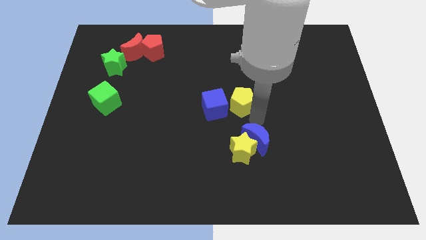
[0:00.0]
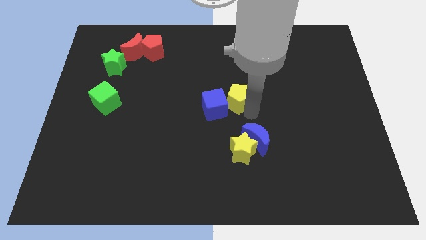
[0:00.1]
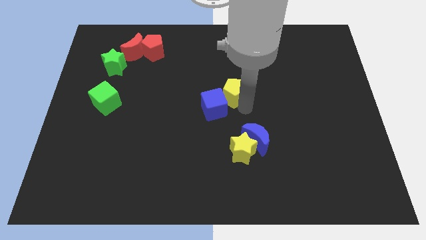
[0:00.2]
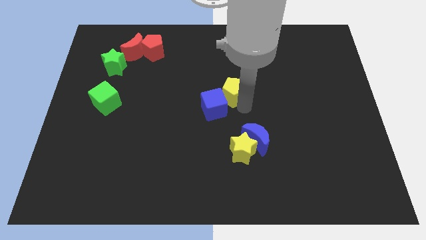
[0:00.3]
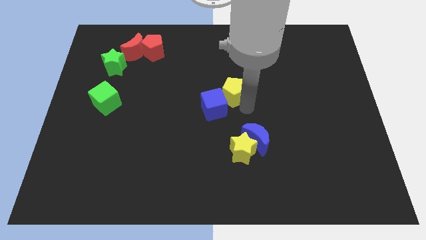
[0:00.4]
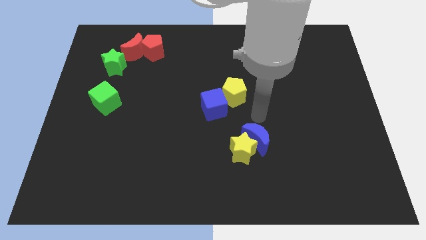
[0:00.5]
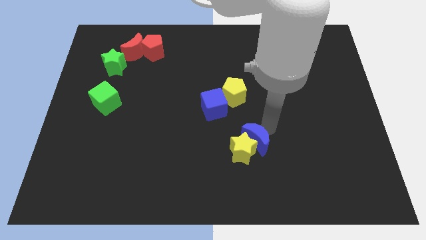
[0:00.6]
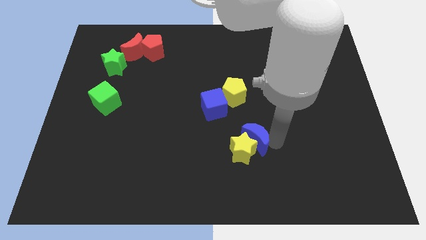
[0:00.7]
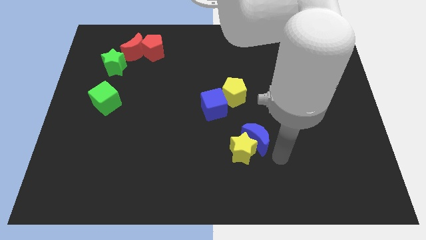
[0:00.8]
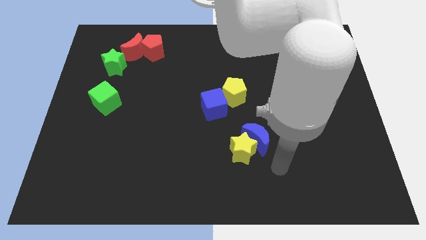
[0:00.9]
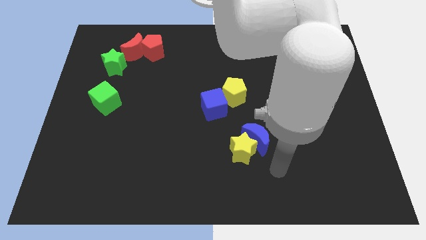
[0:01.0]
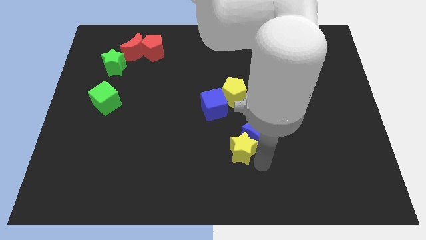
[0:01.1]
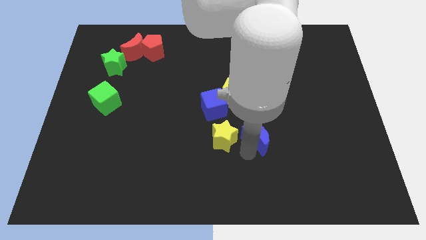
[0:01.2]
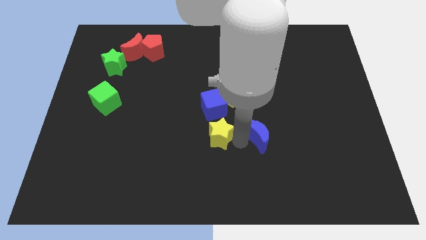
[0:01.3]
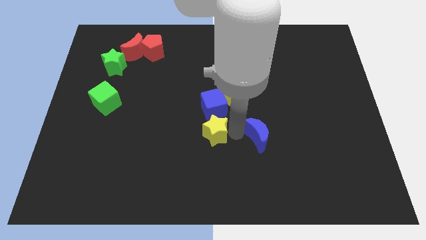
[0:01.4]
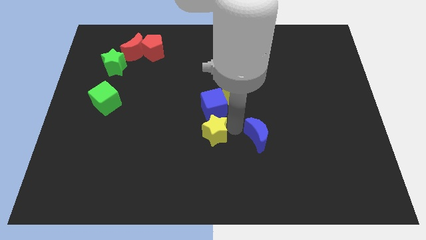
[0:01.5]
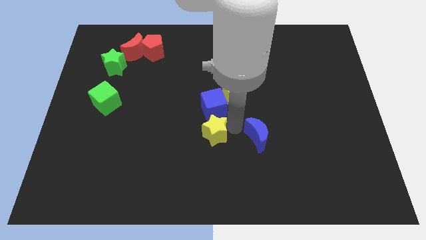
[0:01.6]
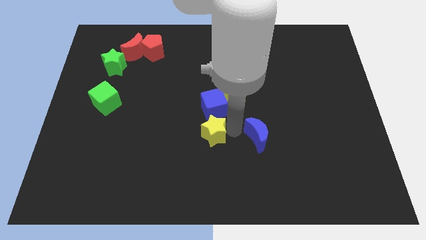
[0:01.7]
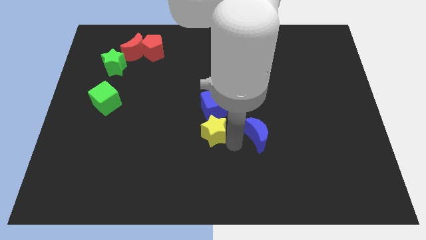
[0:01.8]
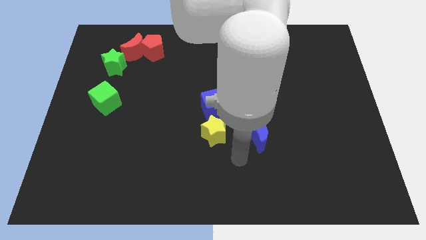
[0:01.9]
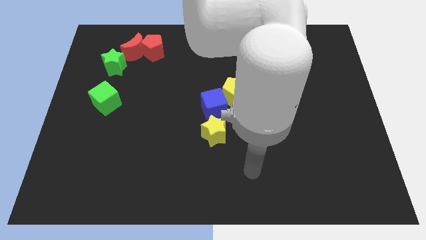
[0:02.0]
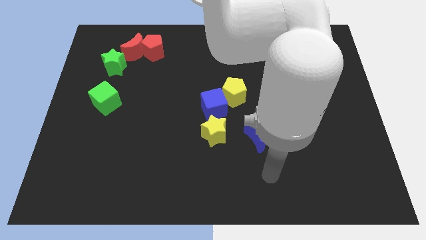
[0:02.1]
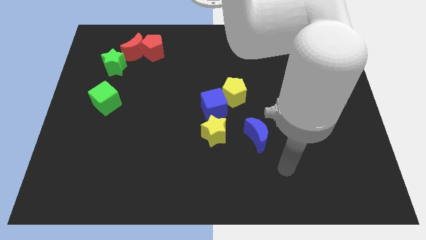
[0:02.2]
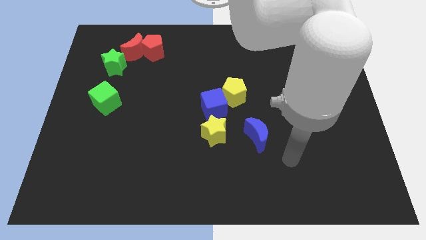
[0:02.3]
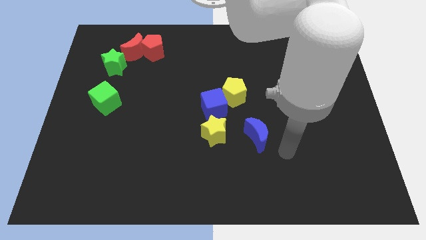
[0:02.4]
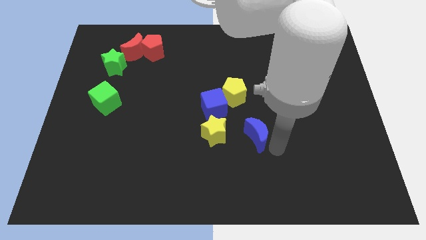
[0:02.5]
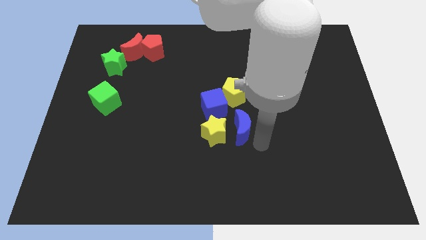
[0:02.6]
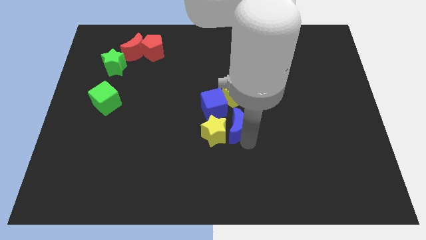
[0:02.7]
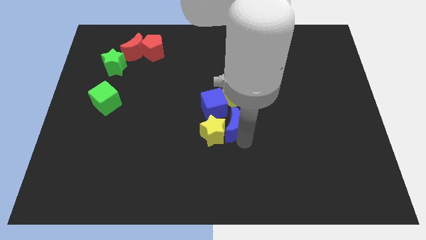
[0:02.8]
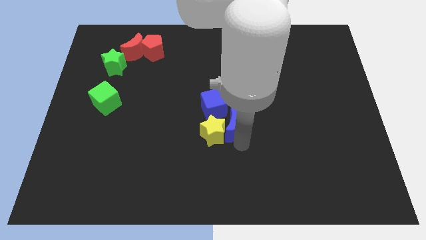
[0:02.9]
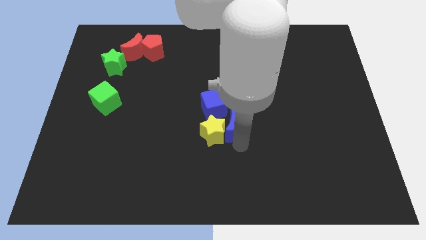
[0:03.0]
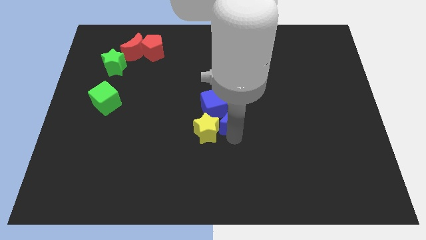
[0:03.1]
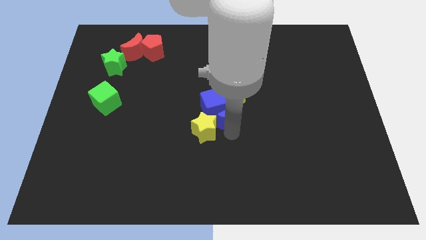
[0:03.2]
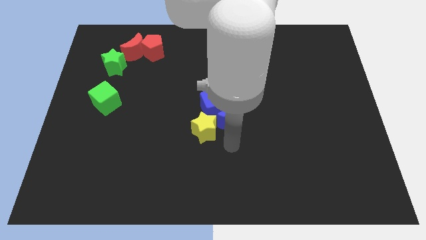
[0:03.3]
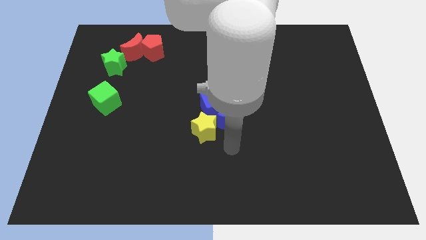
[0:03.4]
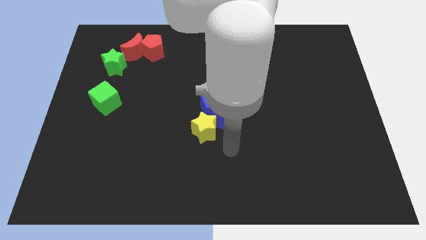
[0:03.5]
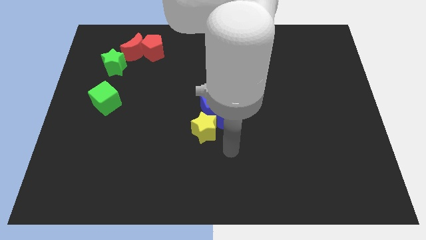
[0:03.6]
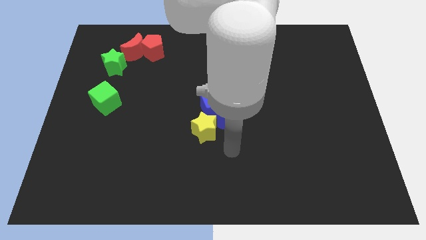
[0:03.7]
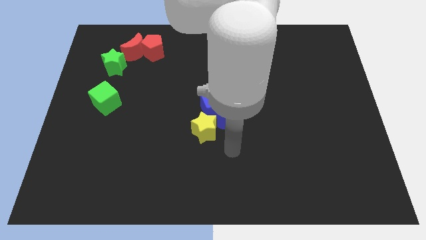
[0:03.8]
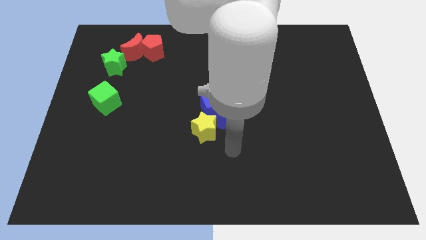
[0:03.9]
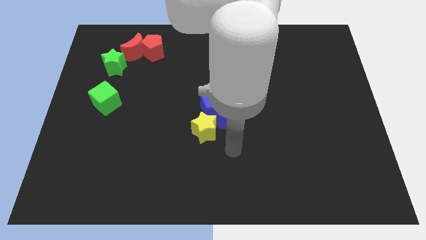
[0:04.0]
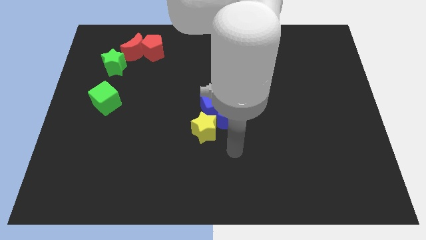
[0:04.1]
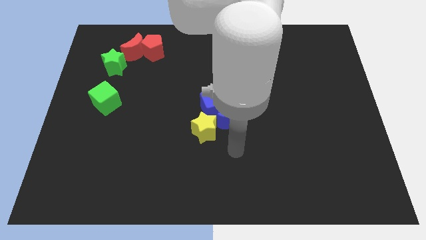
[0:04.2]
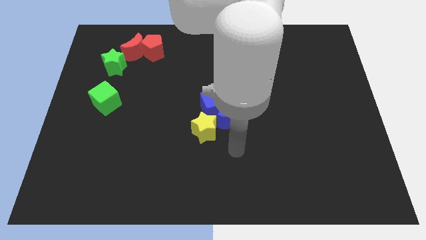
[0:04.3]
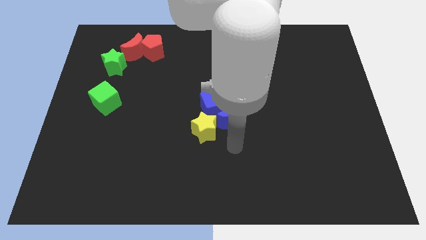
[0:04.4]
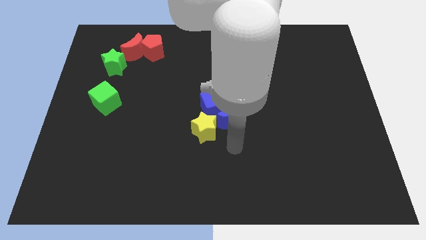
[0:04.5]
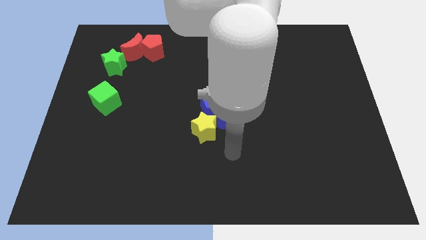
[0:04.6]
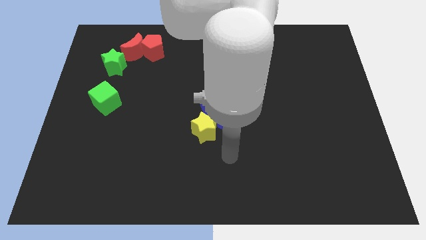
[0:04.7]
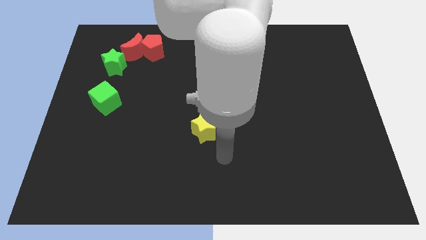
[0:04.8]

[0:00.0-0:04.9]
make a group of yellow and blue blocks at the center of the board

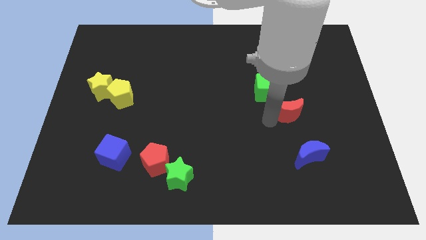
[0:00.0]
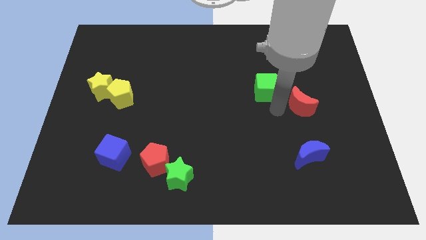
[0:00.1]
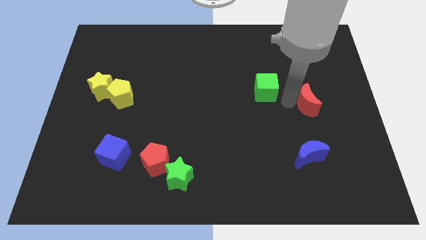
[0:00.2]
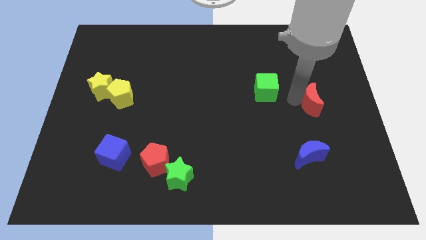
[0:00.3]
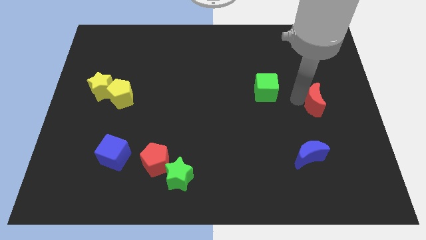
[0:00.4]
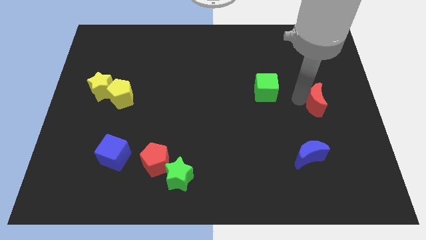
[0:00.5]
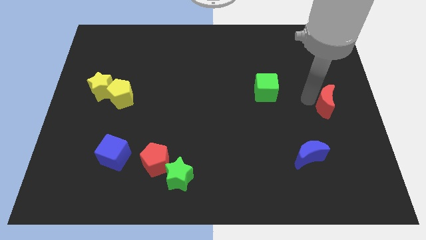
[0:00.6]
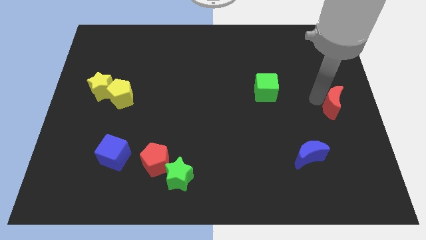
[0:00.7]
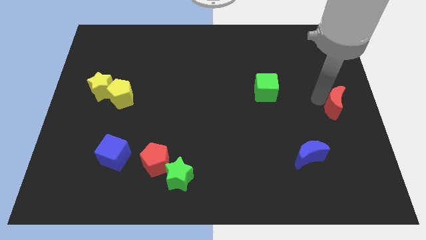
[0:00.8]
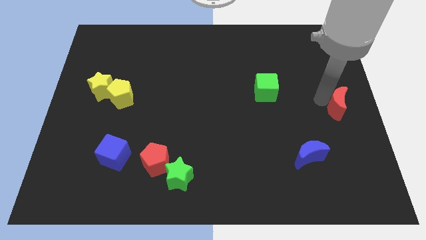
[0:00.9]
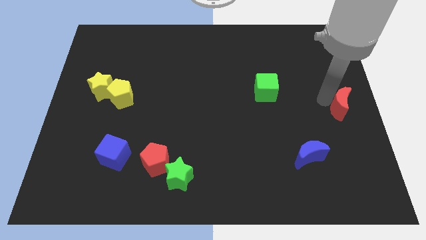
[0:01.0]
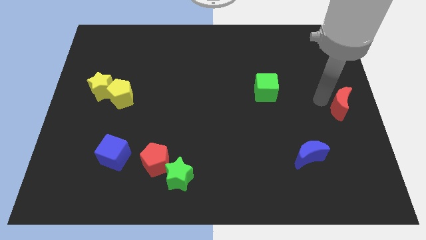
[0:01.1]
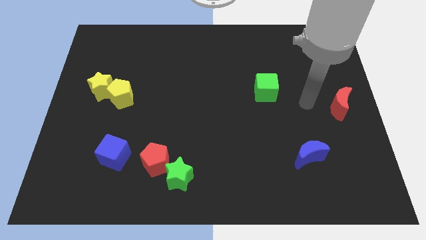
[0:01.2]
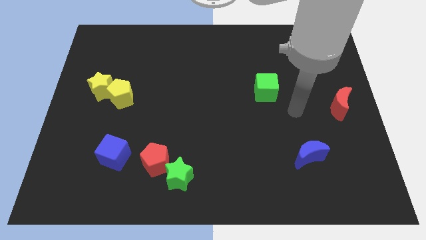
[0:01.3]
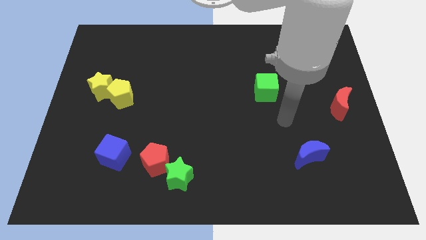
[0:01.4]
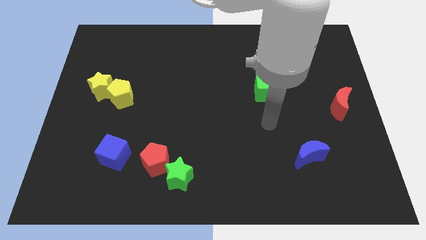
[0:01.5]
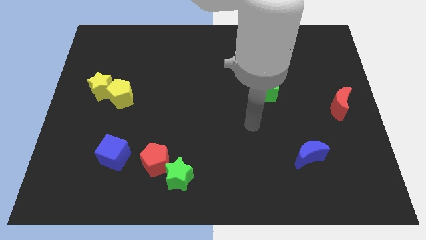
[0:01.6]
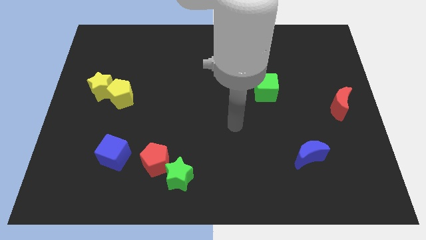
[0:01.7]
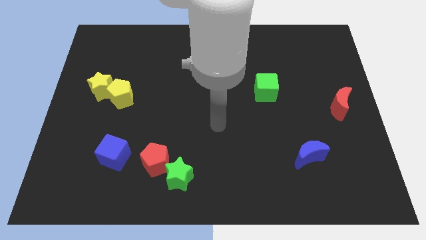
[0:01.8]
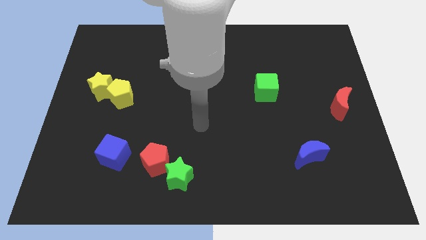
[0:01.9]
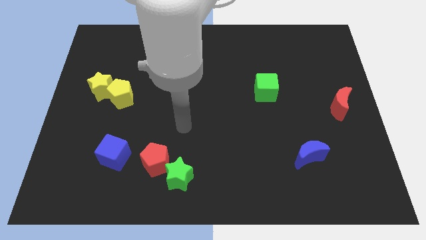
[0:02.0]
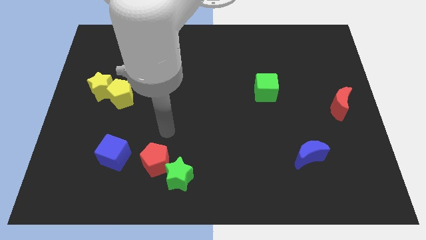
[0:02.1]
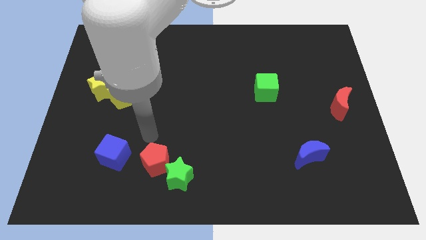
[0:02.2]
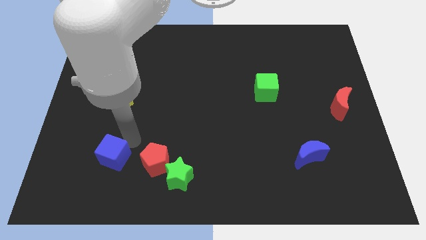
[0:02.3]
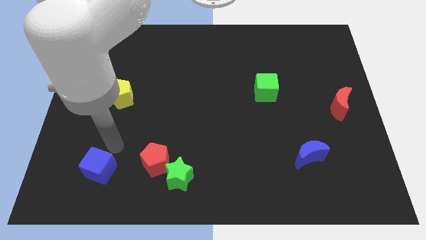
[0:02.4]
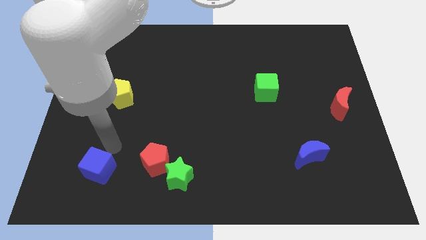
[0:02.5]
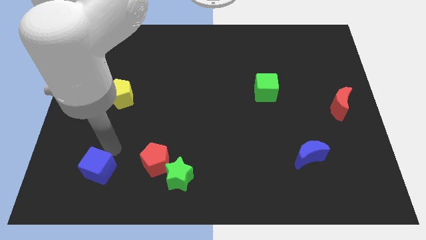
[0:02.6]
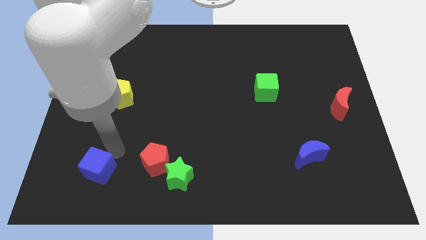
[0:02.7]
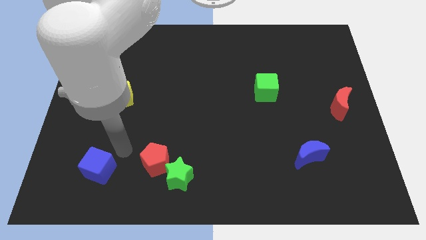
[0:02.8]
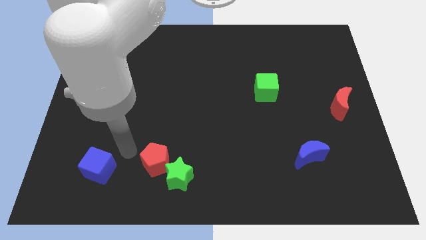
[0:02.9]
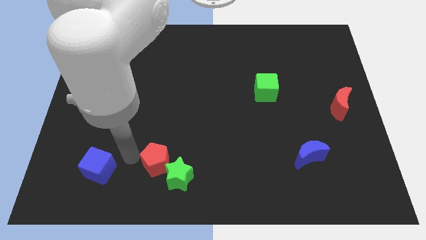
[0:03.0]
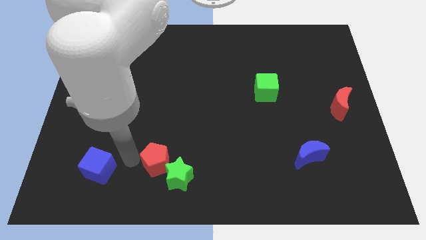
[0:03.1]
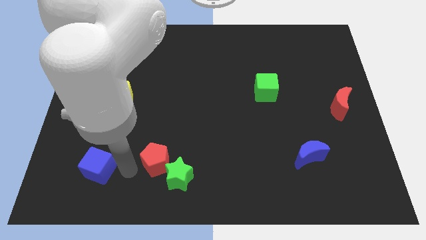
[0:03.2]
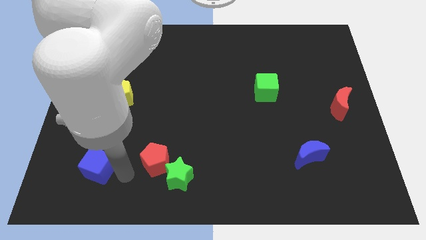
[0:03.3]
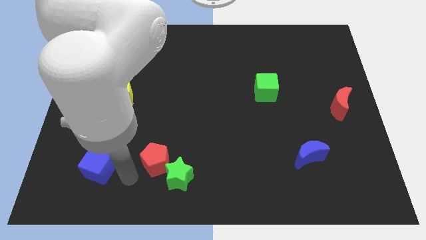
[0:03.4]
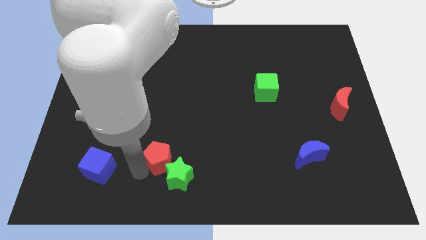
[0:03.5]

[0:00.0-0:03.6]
move the red crescent to the right center

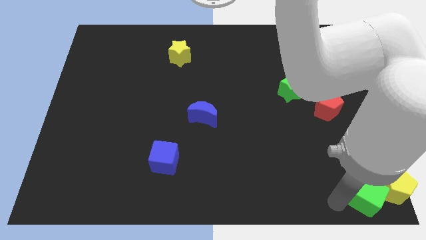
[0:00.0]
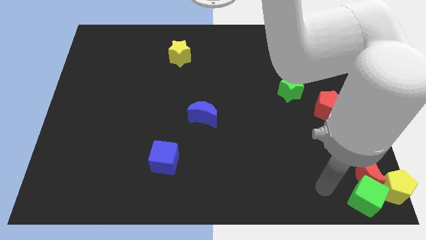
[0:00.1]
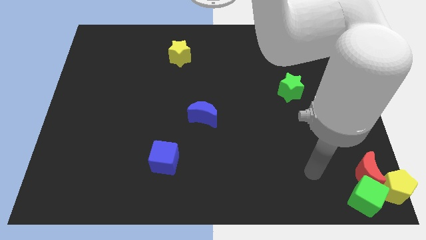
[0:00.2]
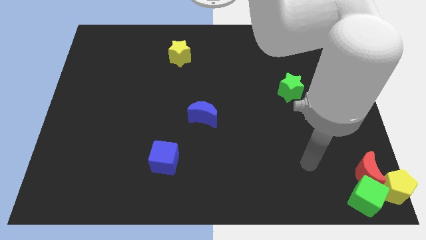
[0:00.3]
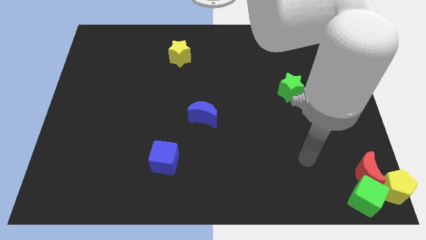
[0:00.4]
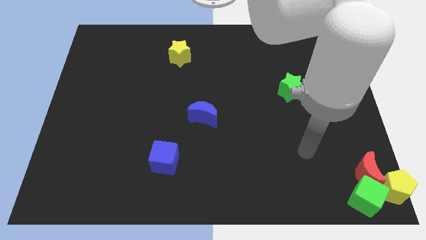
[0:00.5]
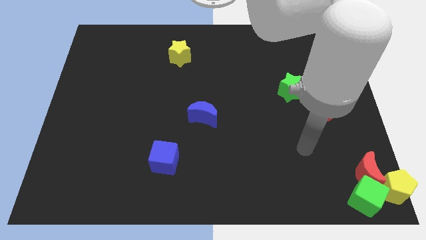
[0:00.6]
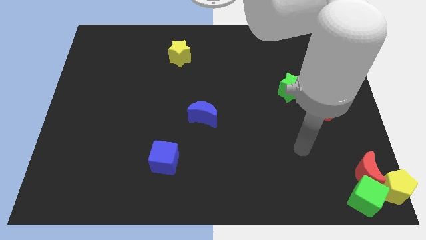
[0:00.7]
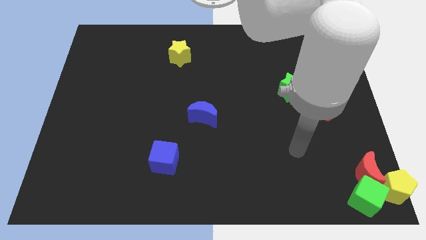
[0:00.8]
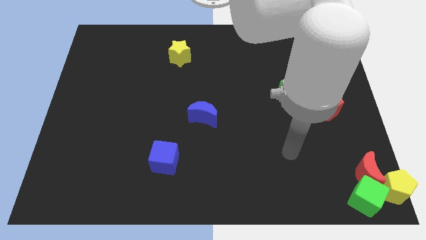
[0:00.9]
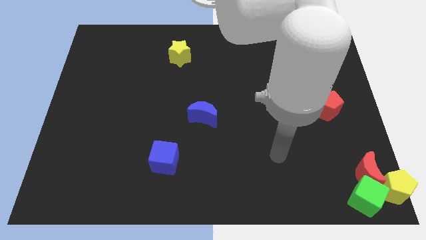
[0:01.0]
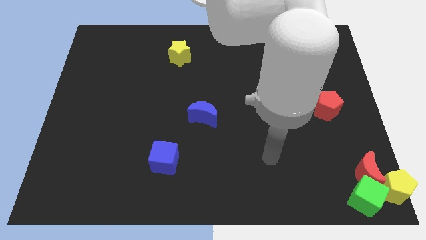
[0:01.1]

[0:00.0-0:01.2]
move your arm away from the green cube
